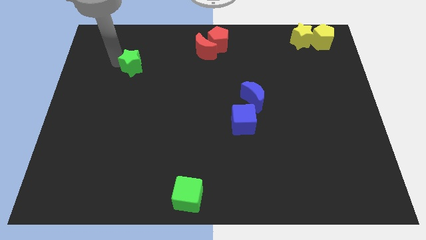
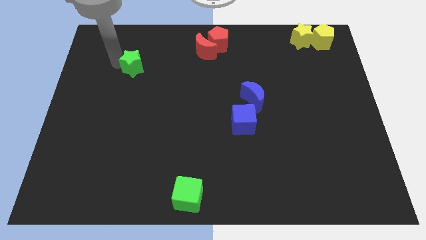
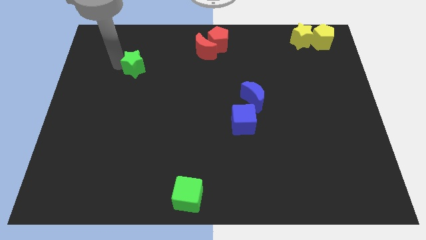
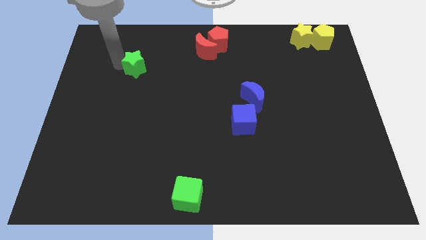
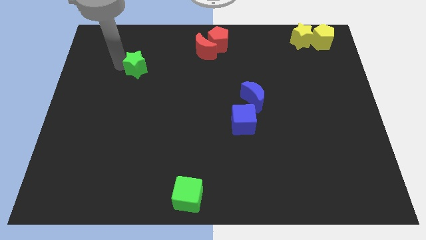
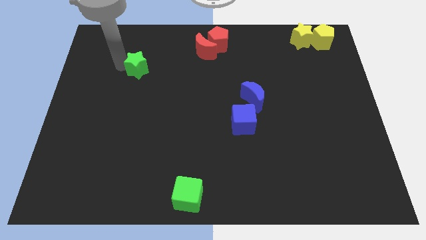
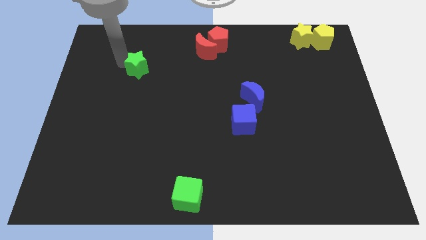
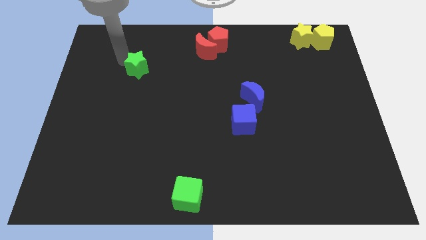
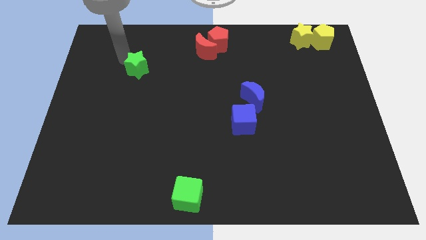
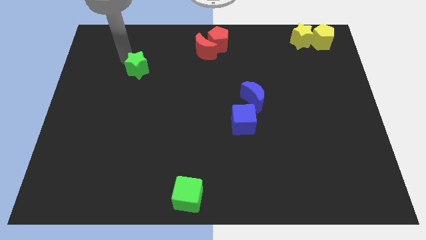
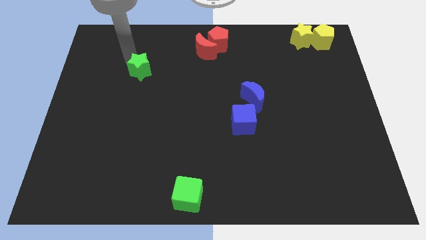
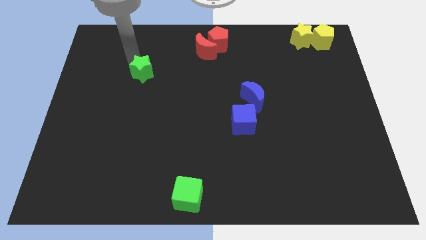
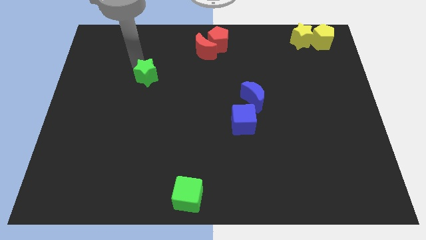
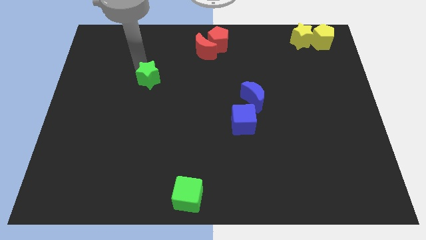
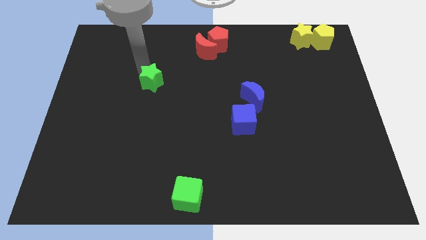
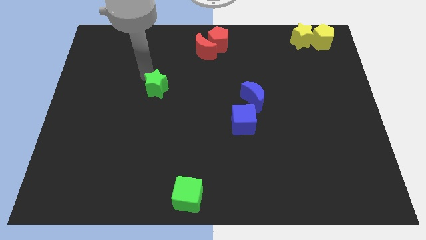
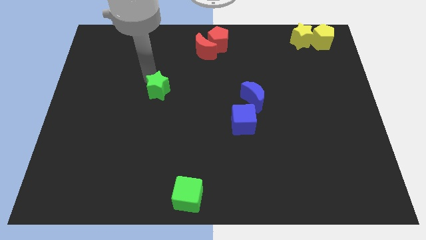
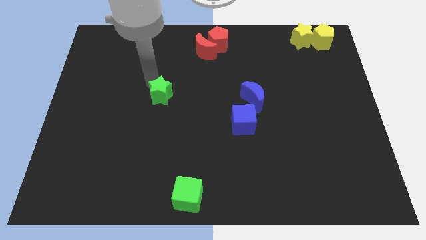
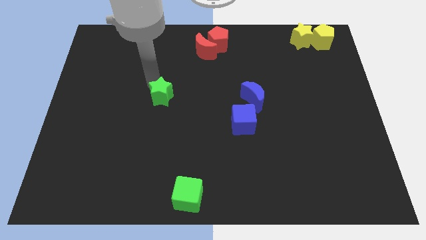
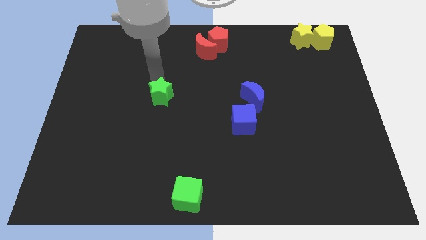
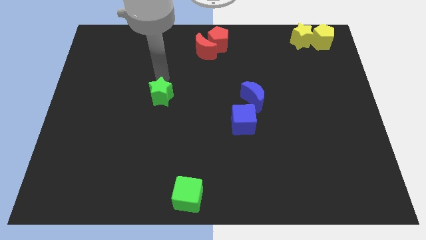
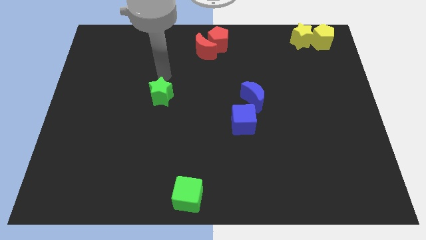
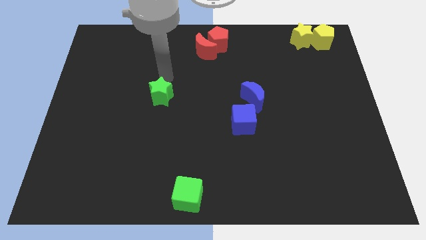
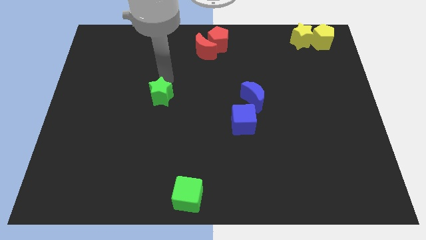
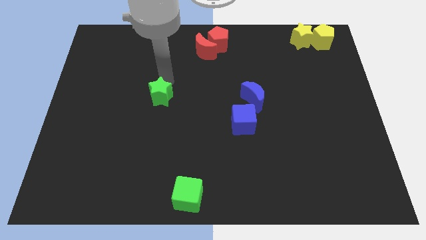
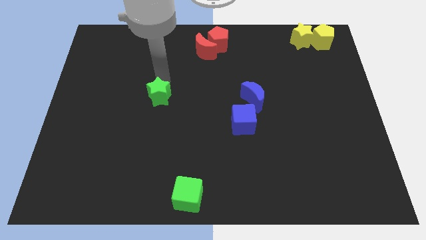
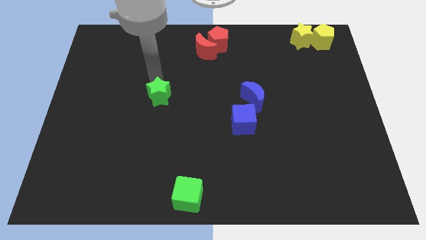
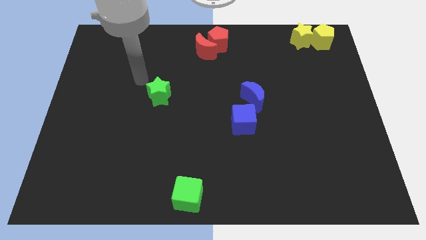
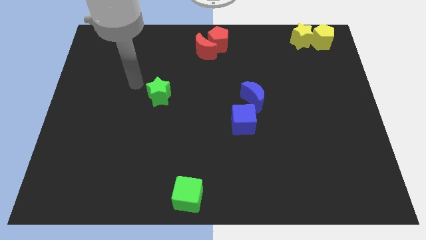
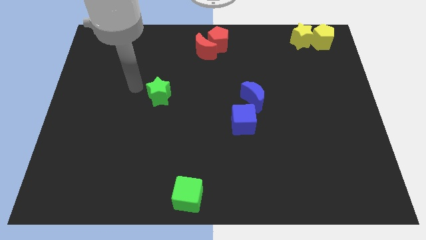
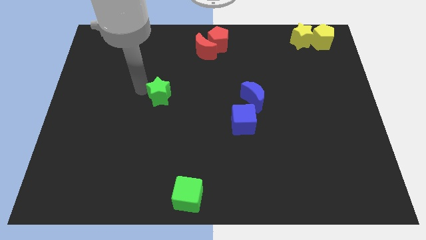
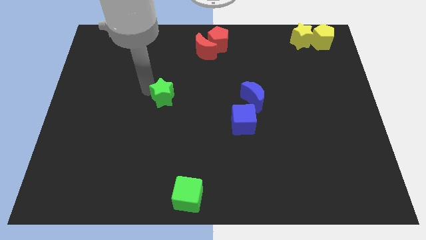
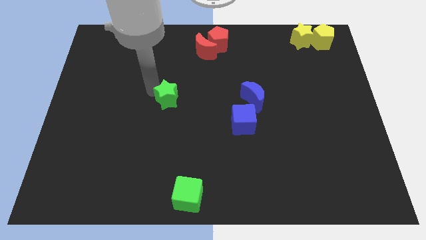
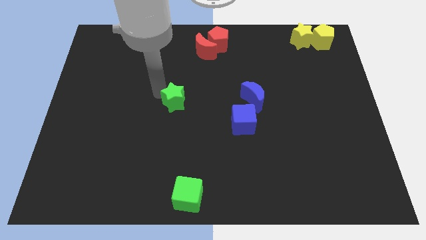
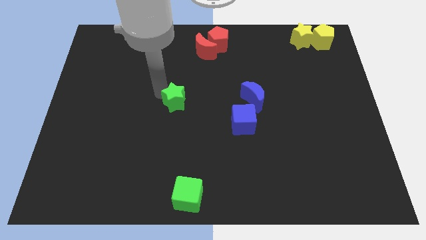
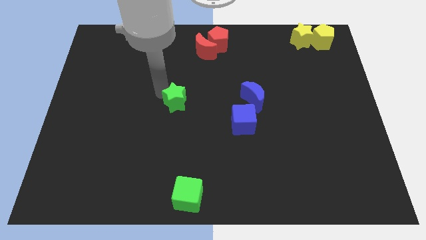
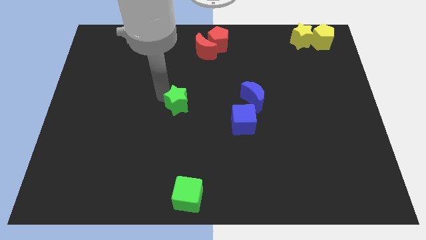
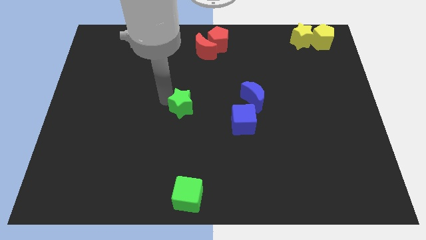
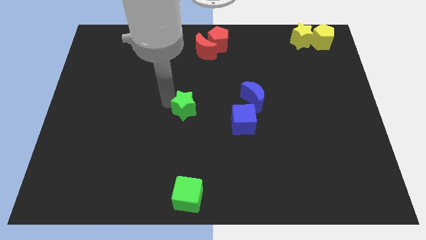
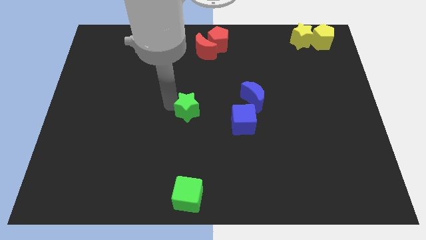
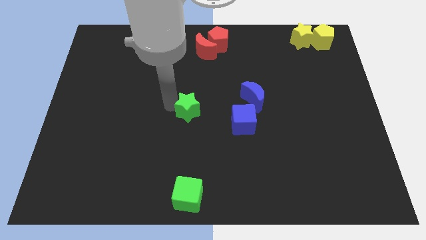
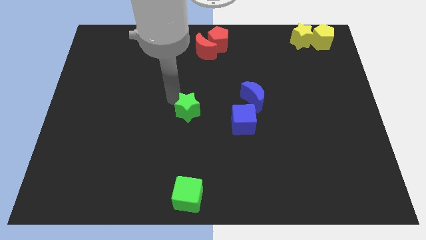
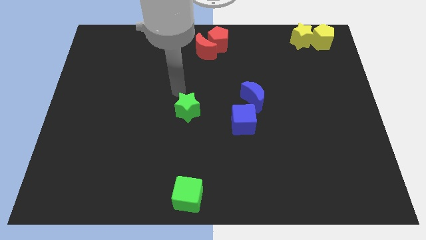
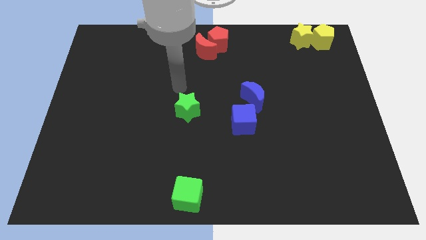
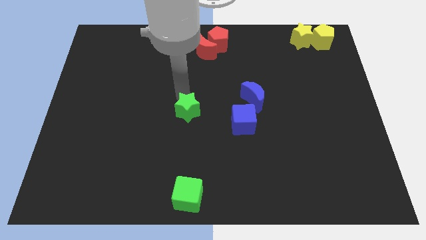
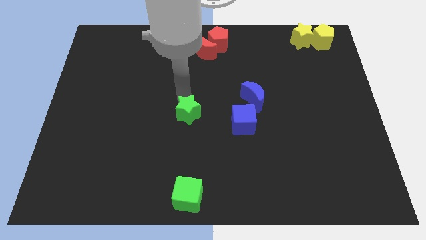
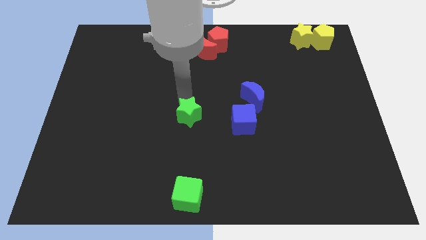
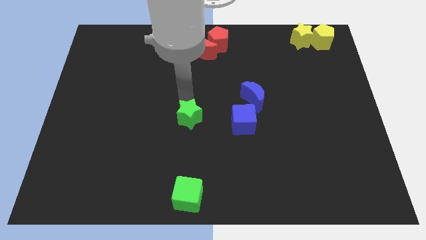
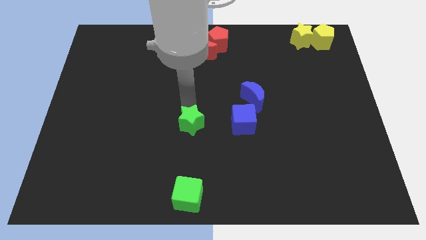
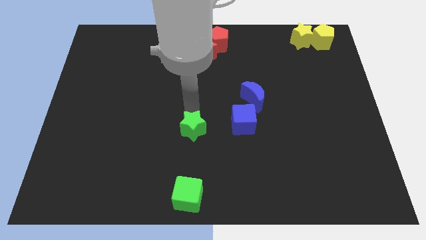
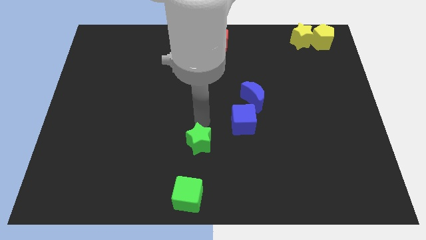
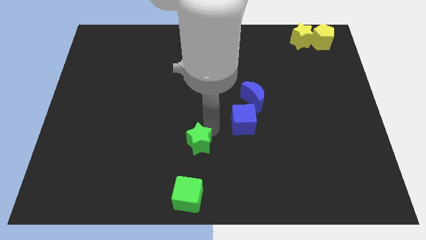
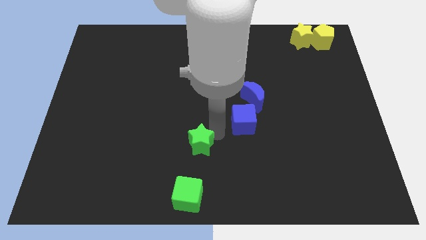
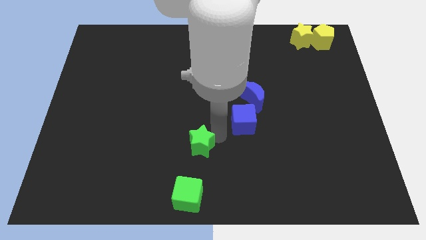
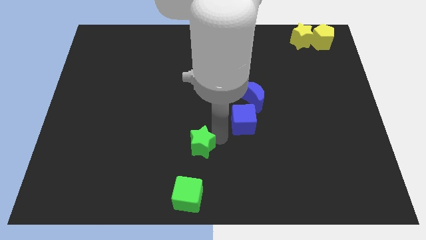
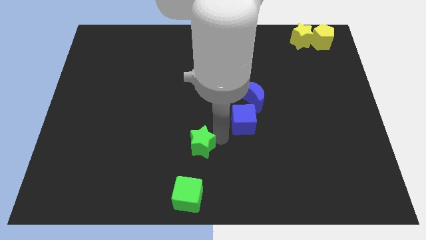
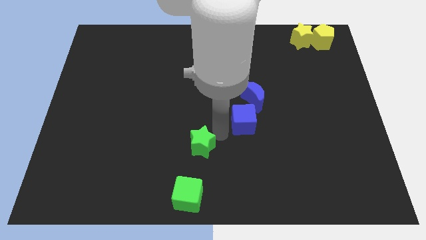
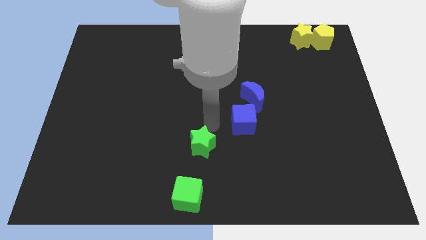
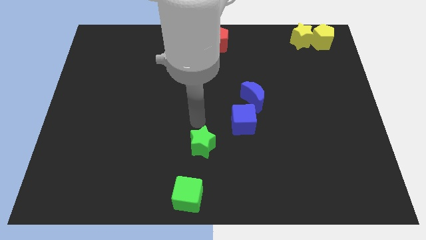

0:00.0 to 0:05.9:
move the green star above the green cube

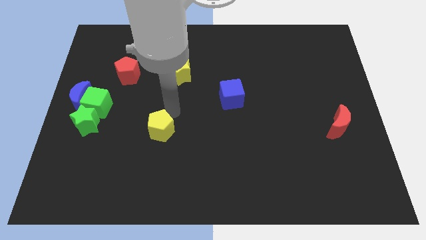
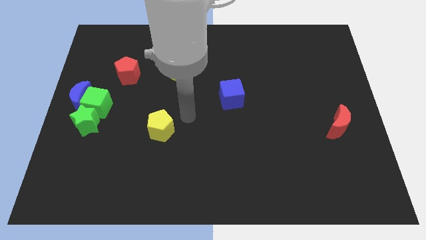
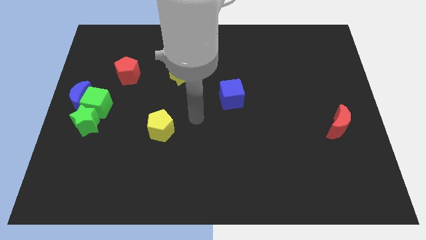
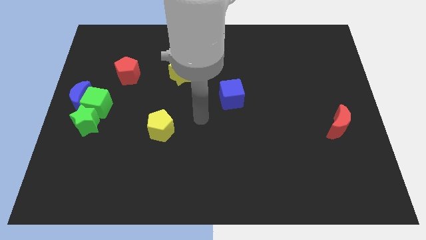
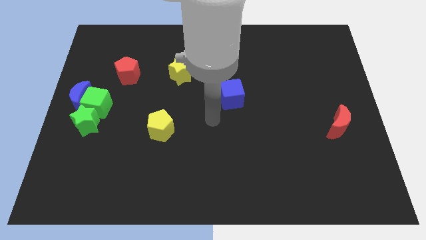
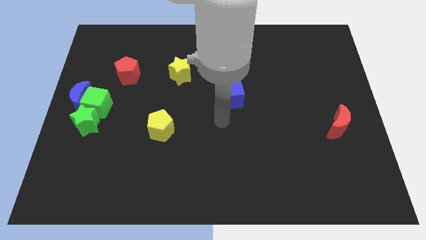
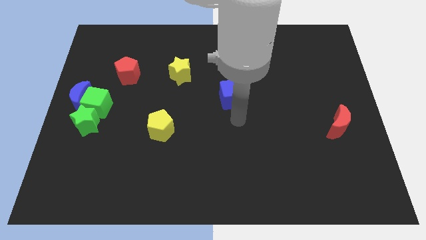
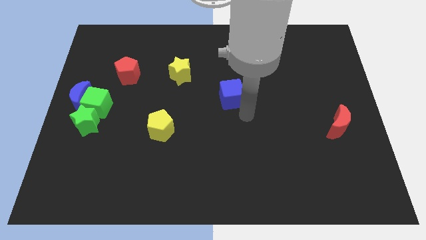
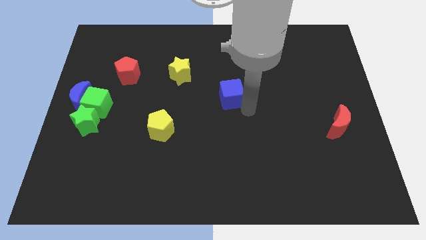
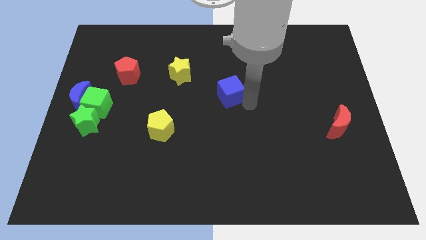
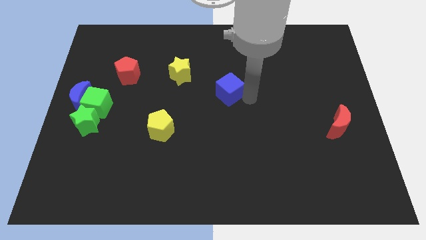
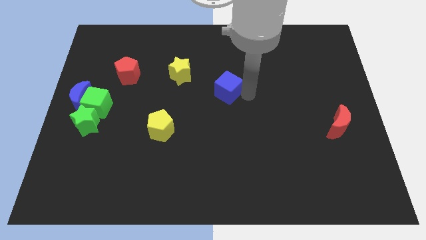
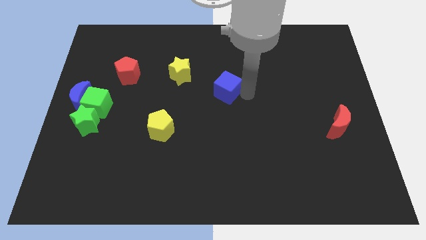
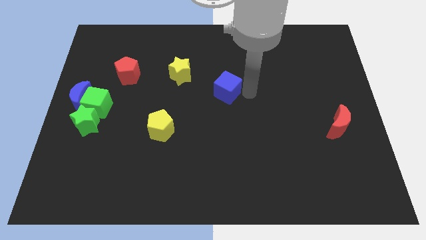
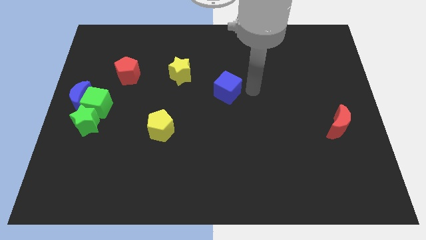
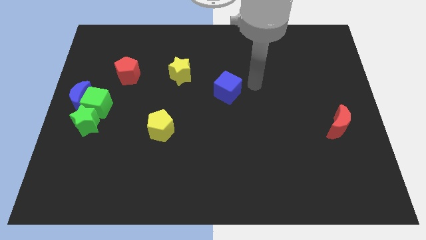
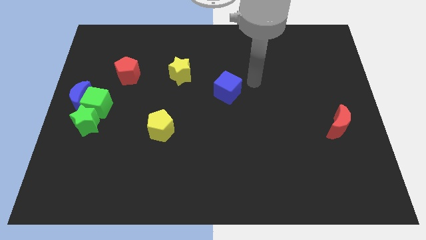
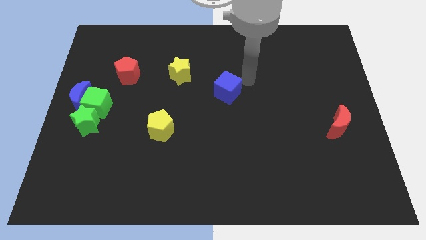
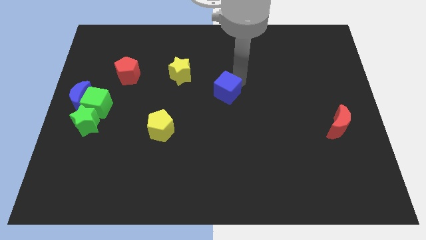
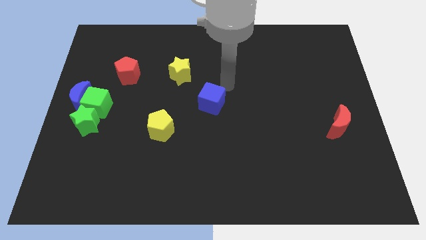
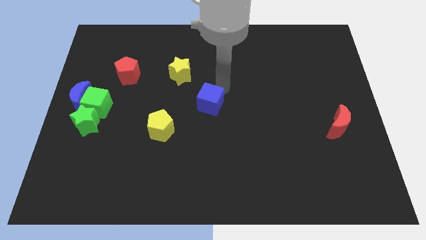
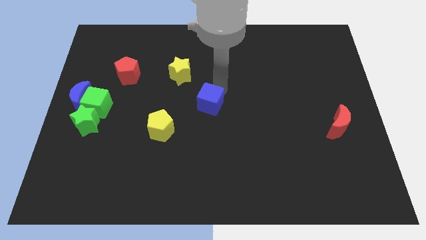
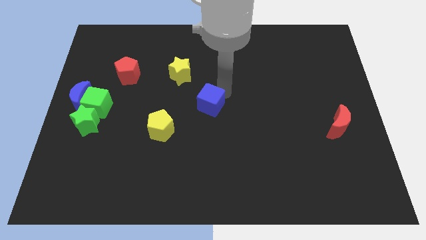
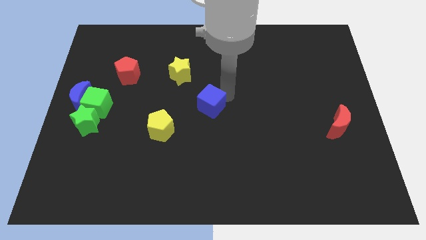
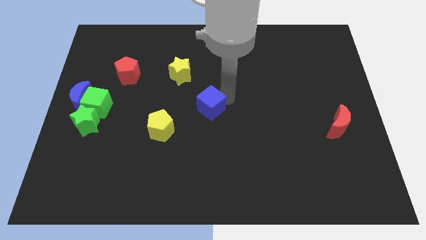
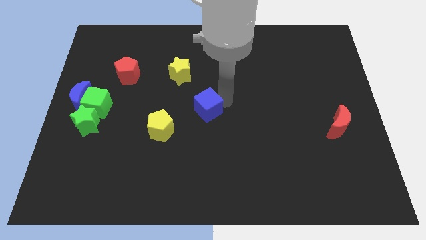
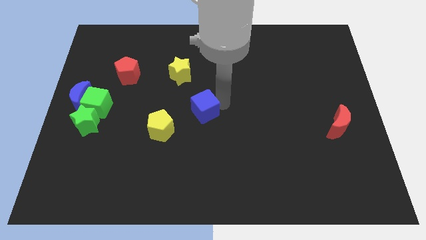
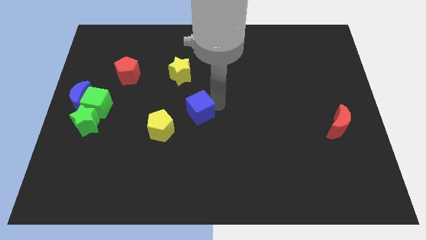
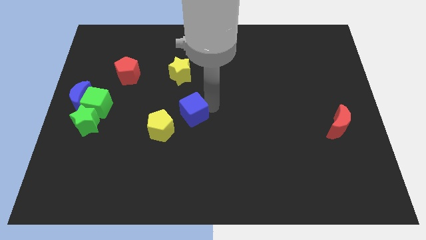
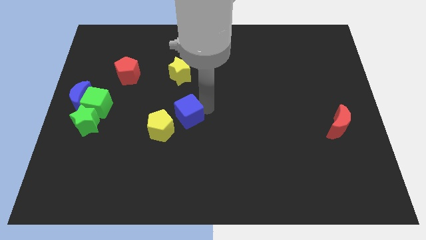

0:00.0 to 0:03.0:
place blue cube at the top right side of yellow pentagon

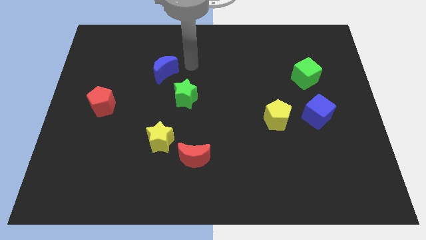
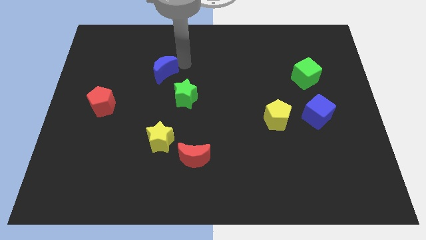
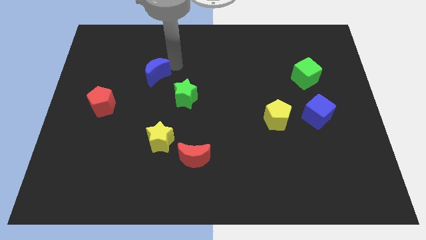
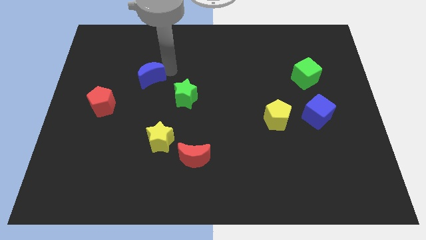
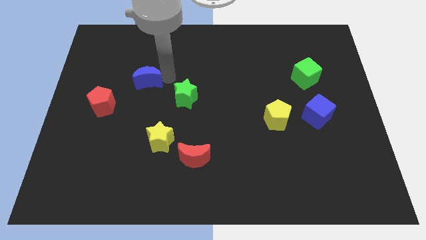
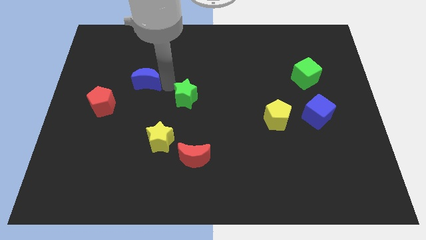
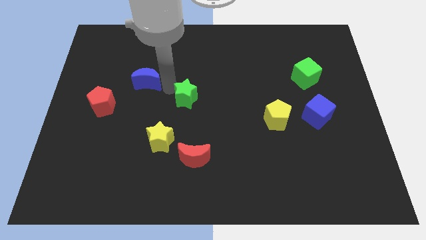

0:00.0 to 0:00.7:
move the blue crescent to the down
